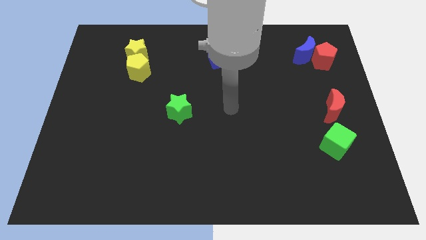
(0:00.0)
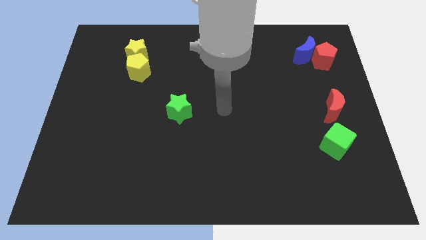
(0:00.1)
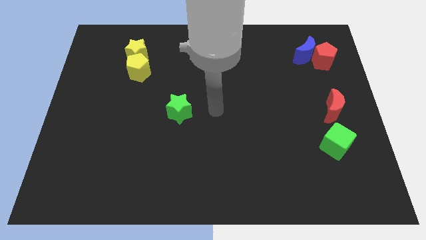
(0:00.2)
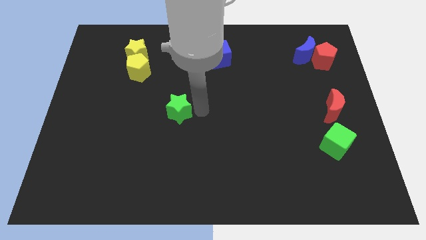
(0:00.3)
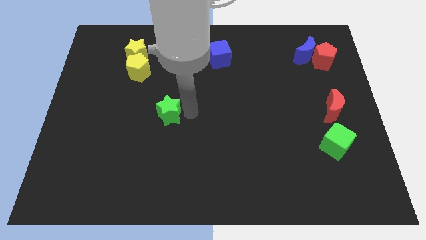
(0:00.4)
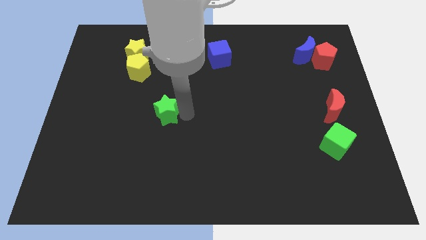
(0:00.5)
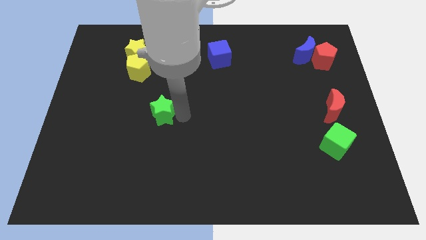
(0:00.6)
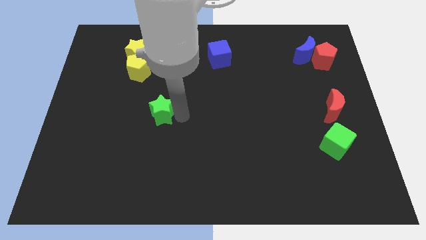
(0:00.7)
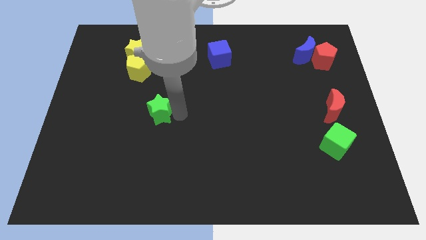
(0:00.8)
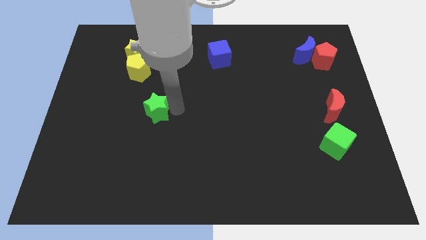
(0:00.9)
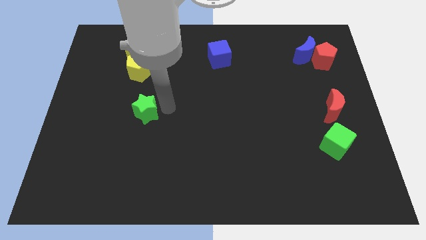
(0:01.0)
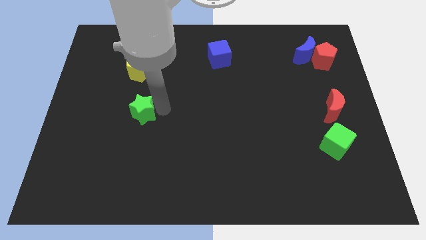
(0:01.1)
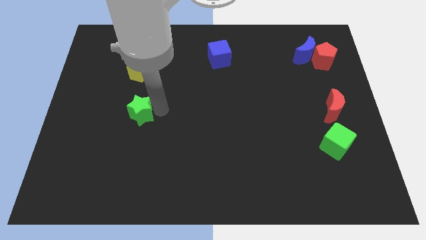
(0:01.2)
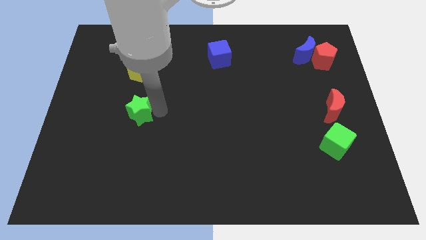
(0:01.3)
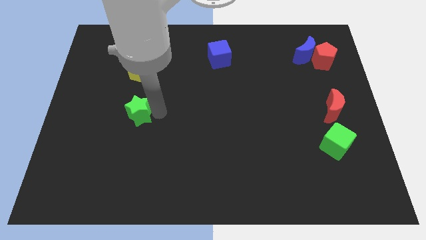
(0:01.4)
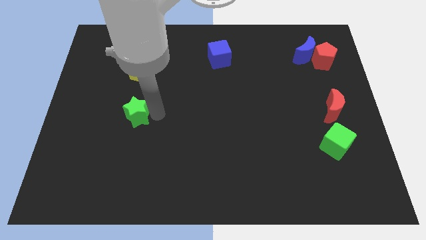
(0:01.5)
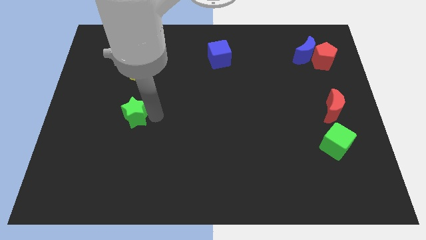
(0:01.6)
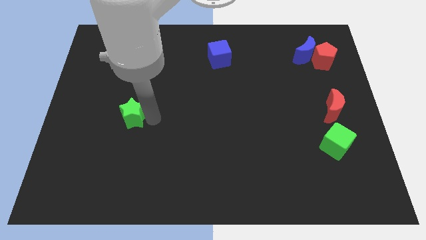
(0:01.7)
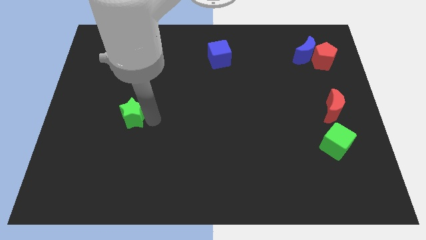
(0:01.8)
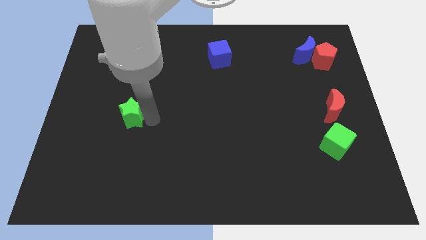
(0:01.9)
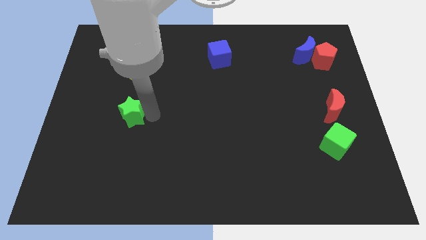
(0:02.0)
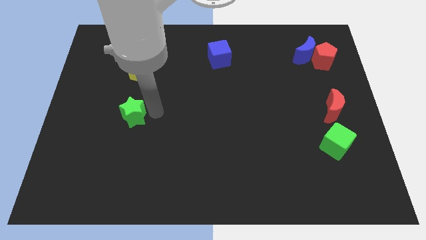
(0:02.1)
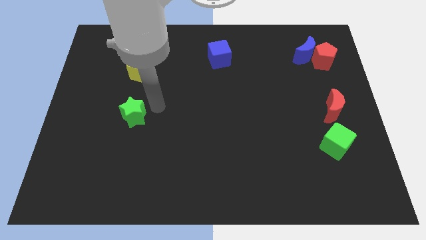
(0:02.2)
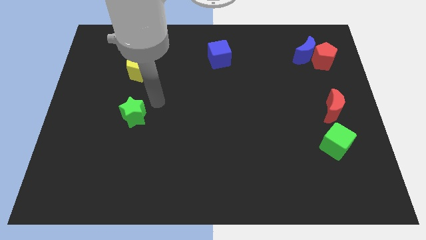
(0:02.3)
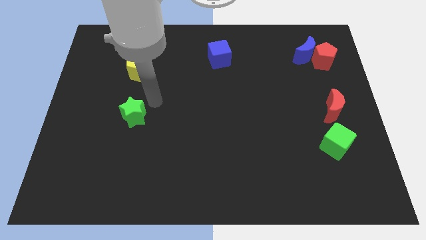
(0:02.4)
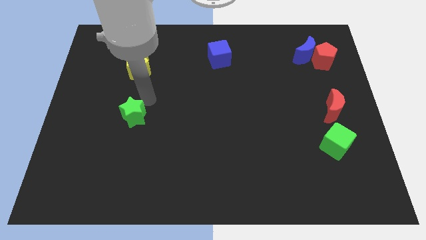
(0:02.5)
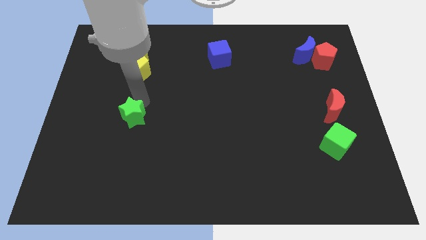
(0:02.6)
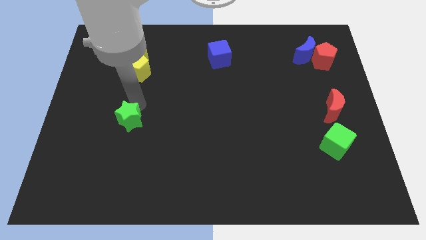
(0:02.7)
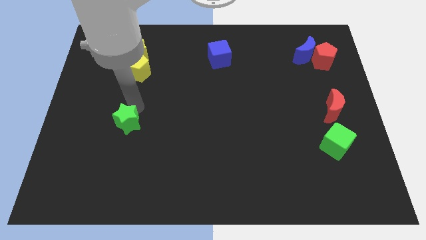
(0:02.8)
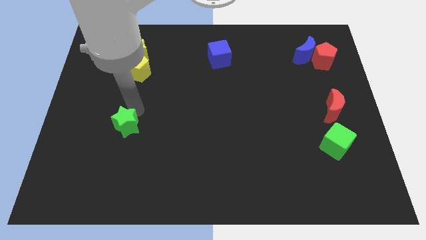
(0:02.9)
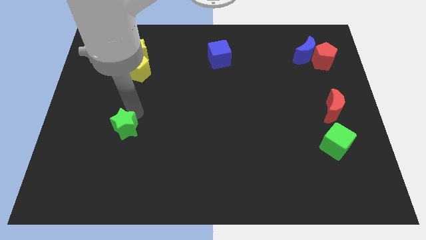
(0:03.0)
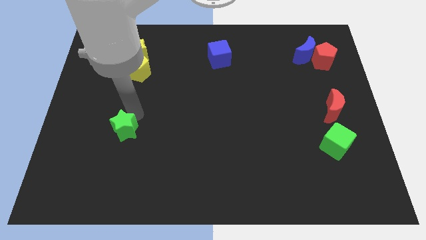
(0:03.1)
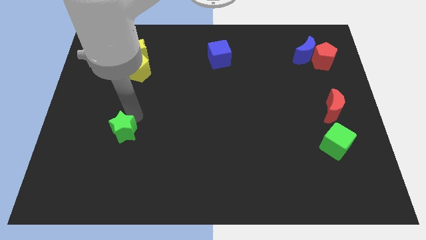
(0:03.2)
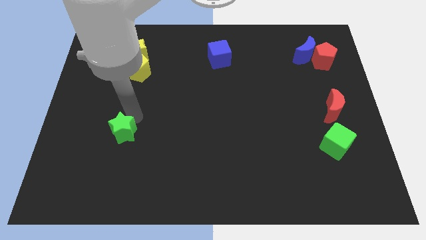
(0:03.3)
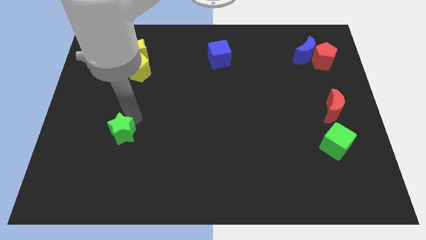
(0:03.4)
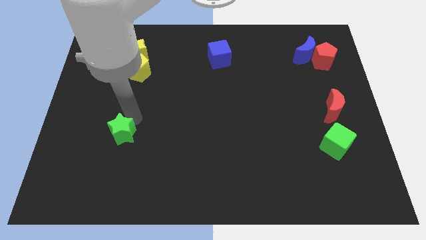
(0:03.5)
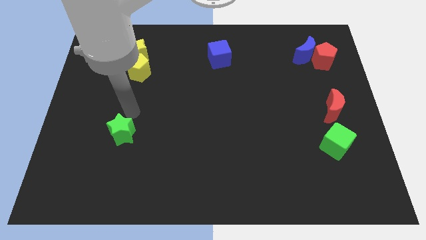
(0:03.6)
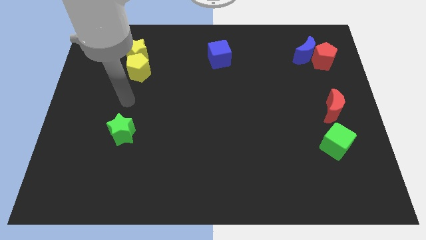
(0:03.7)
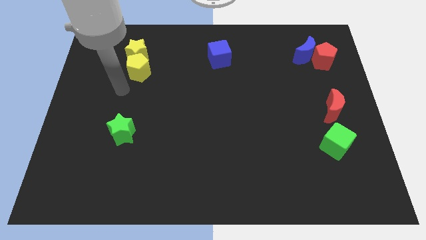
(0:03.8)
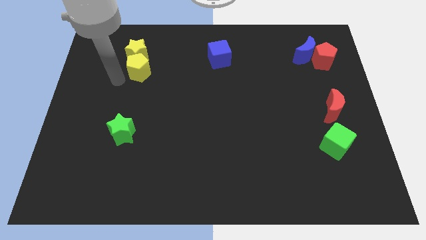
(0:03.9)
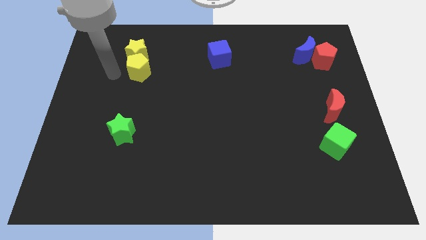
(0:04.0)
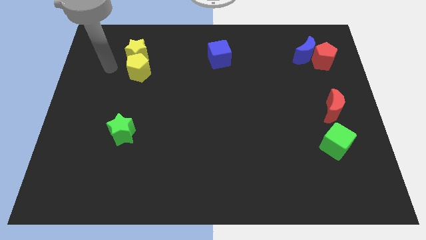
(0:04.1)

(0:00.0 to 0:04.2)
move the green star slightly to the bottom of the board

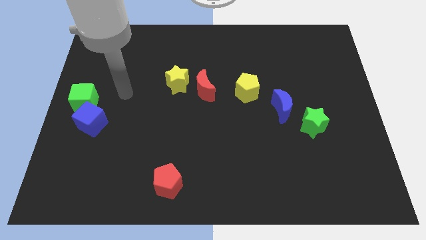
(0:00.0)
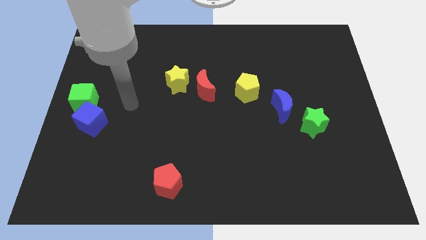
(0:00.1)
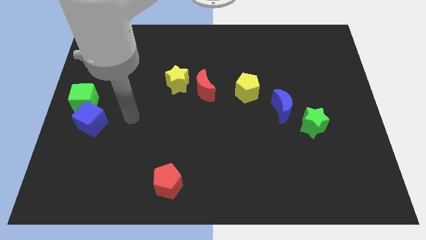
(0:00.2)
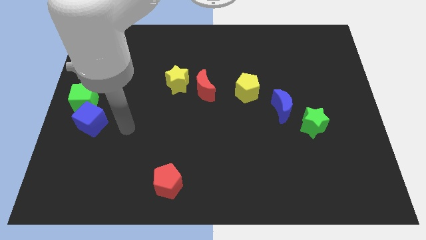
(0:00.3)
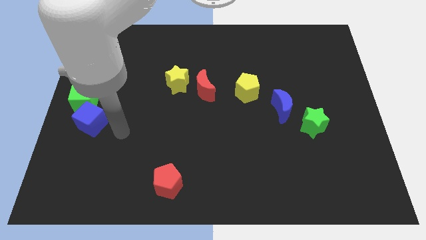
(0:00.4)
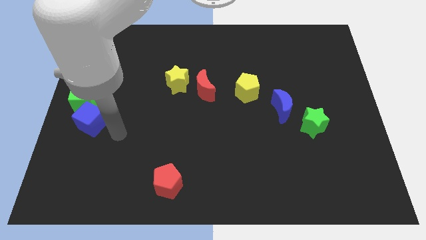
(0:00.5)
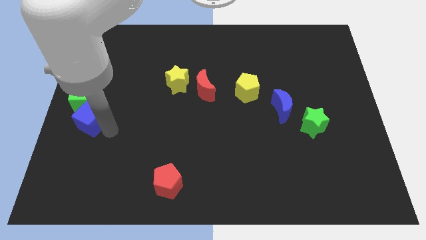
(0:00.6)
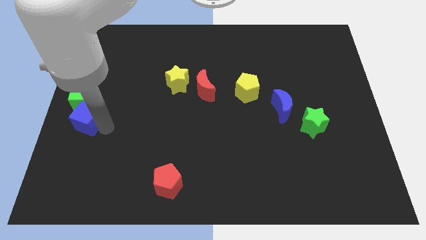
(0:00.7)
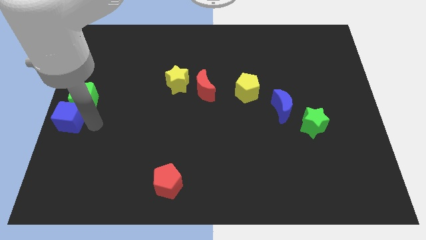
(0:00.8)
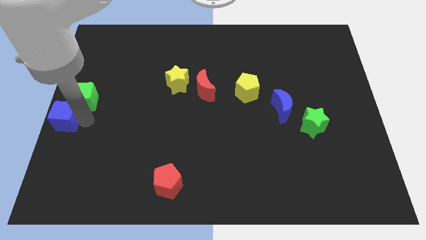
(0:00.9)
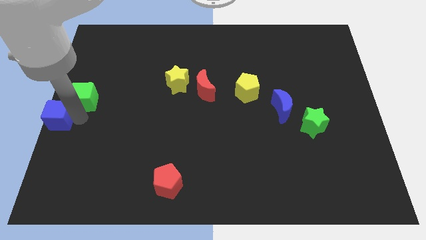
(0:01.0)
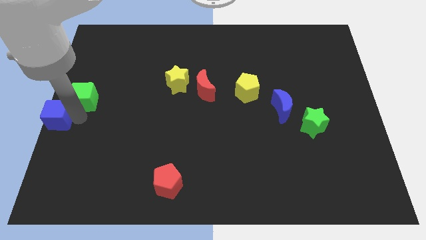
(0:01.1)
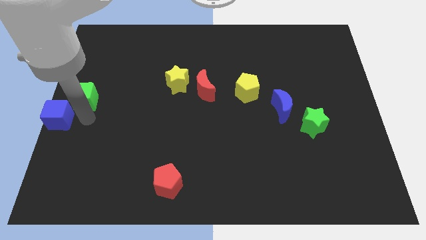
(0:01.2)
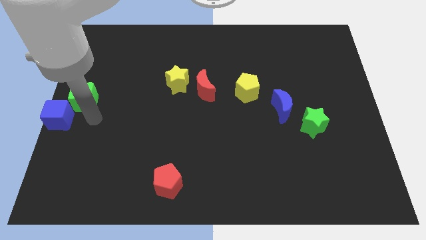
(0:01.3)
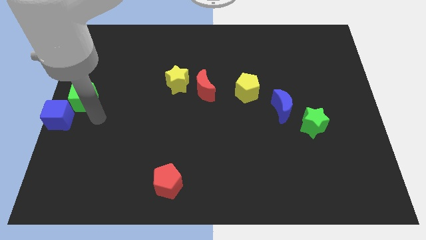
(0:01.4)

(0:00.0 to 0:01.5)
move the blue cube to the left center of the board

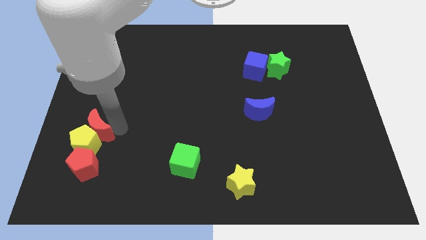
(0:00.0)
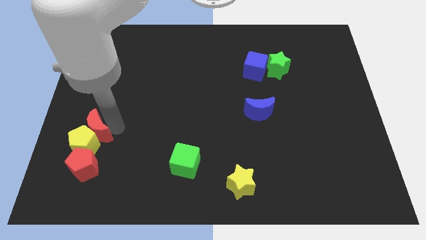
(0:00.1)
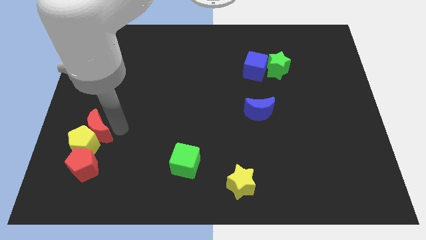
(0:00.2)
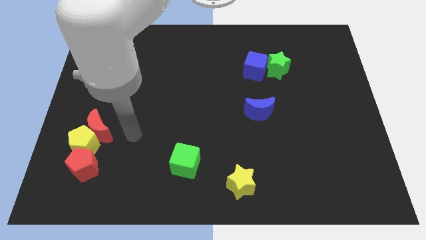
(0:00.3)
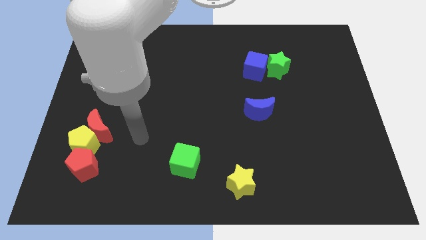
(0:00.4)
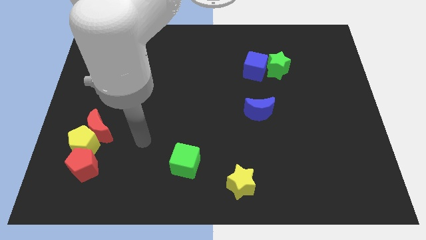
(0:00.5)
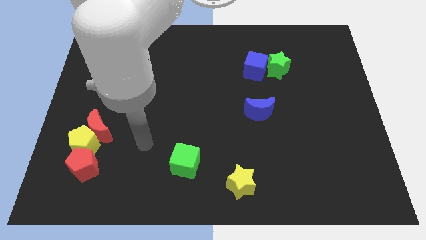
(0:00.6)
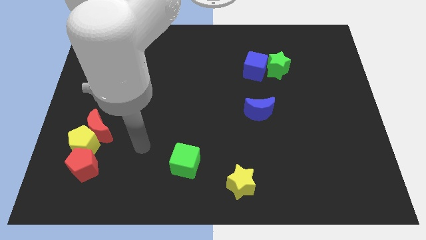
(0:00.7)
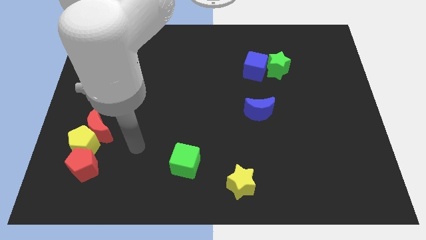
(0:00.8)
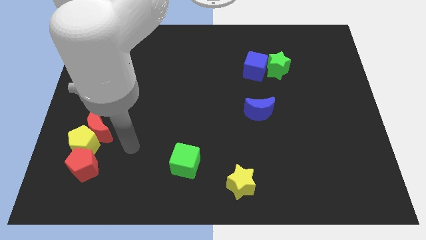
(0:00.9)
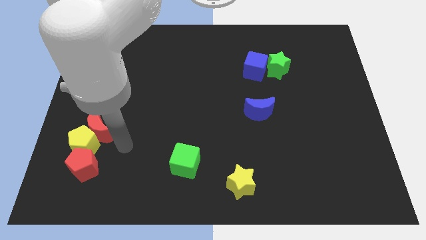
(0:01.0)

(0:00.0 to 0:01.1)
point your arm to the right side of yellow pentagon

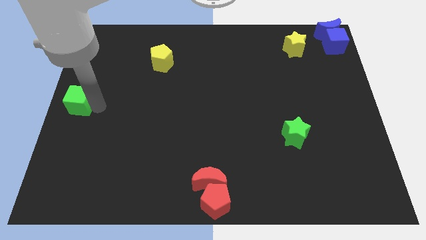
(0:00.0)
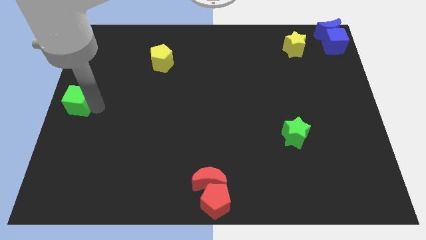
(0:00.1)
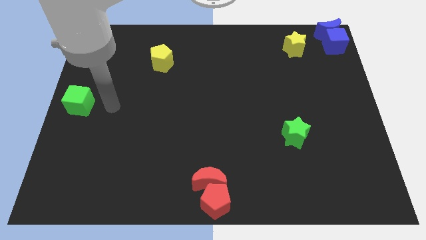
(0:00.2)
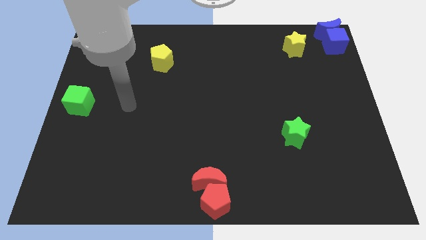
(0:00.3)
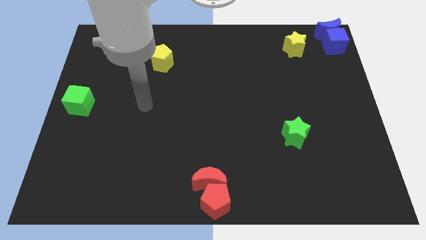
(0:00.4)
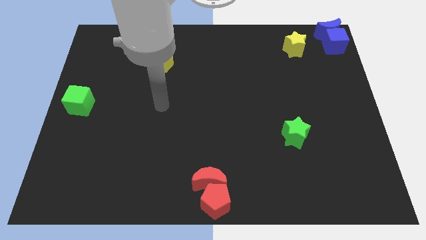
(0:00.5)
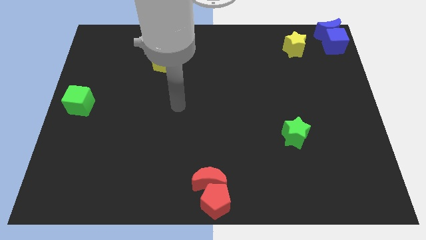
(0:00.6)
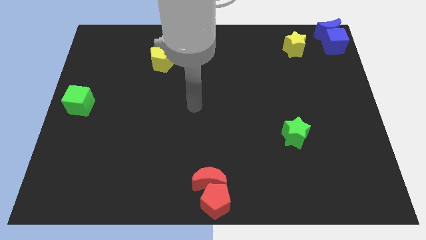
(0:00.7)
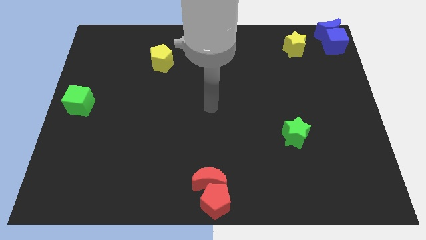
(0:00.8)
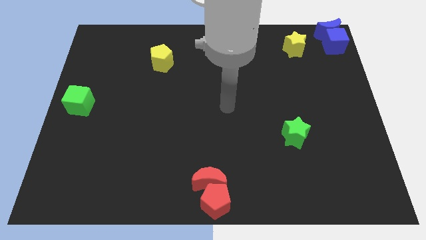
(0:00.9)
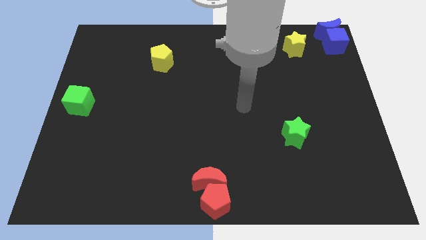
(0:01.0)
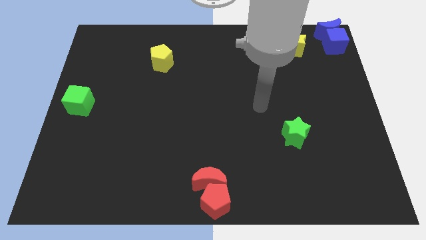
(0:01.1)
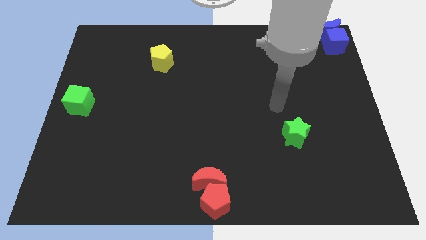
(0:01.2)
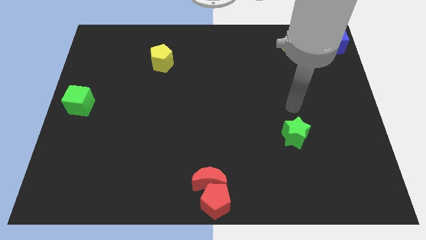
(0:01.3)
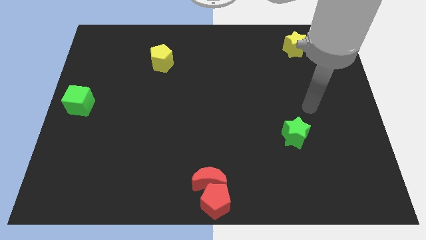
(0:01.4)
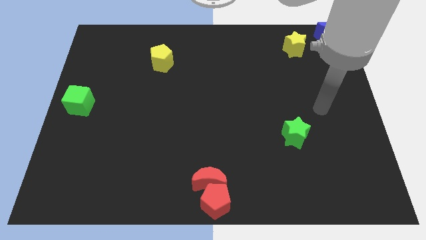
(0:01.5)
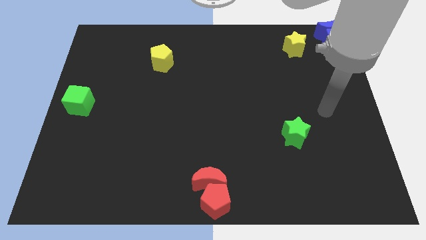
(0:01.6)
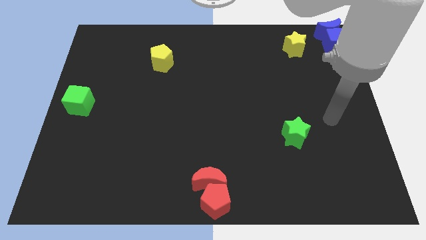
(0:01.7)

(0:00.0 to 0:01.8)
move the arm from left center to right center of the board

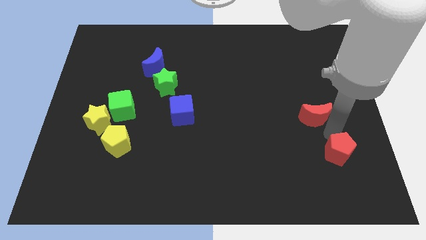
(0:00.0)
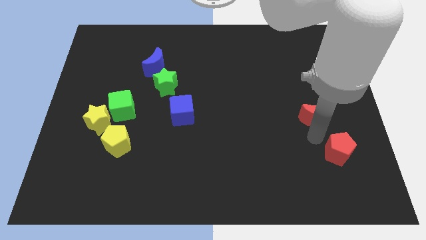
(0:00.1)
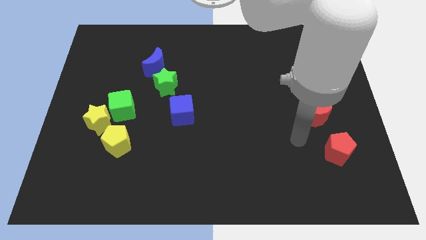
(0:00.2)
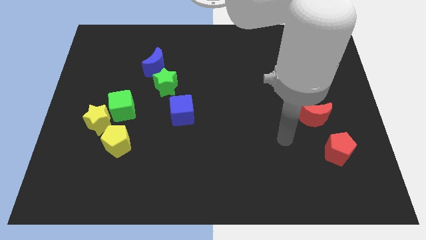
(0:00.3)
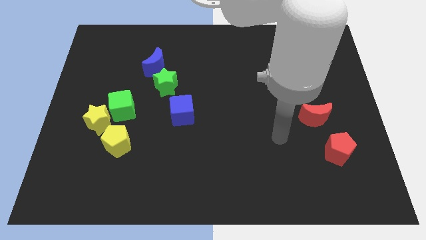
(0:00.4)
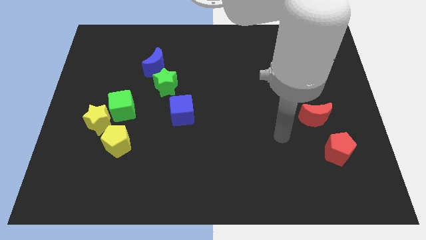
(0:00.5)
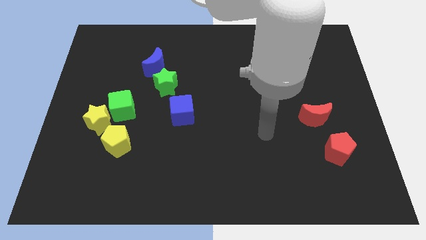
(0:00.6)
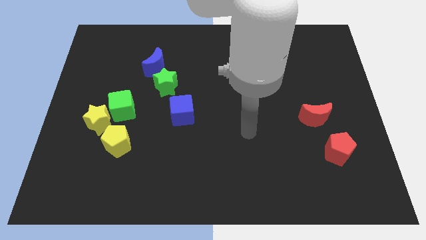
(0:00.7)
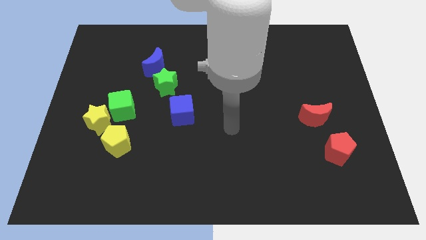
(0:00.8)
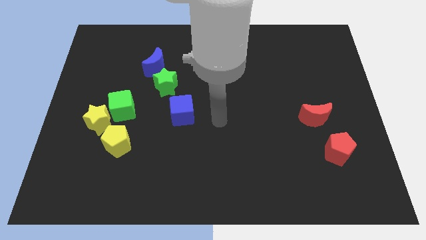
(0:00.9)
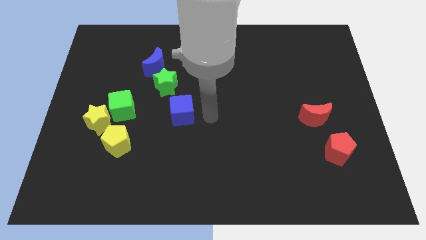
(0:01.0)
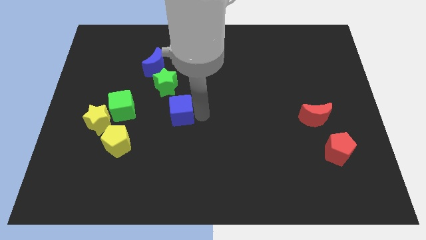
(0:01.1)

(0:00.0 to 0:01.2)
place your arm to the right of blue cube
